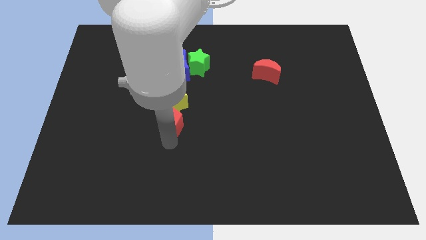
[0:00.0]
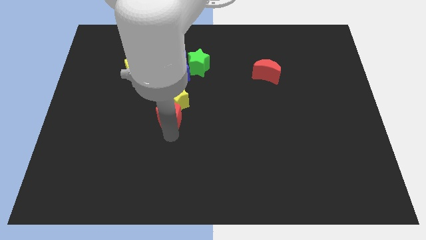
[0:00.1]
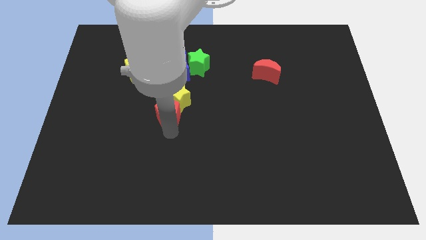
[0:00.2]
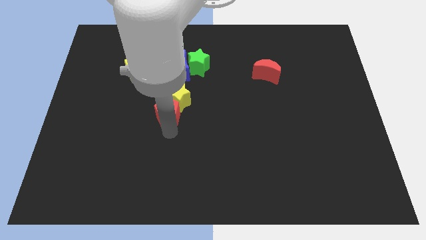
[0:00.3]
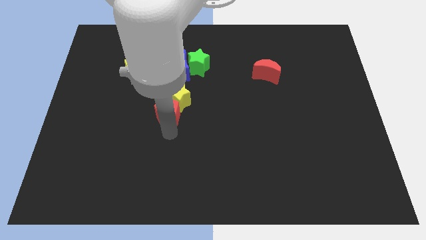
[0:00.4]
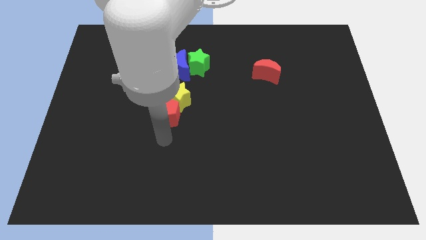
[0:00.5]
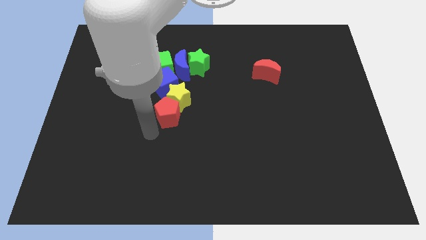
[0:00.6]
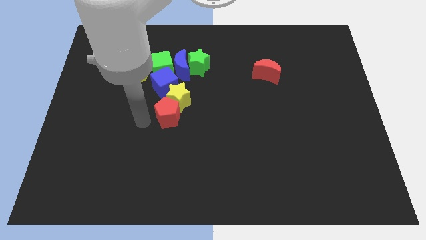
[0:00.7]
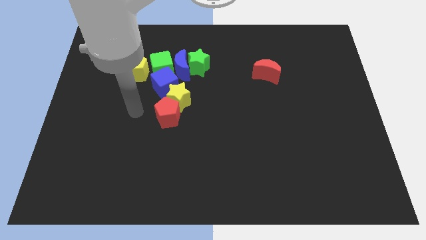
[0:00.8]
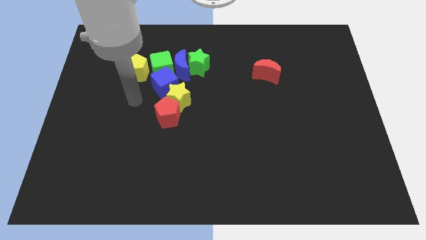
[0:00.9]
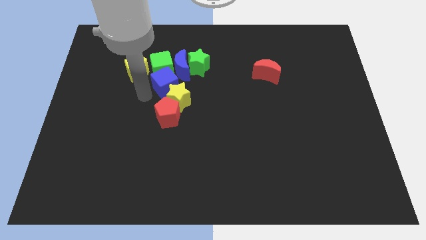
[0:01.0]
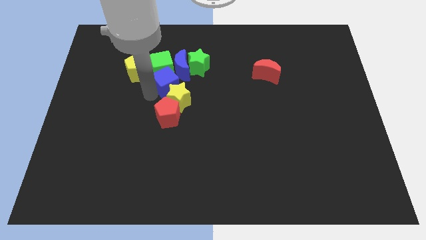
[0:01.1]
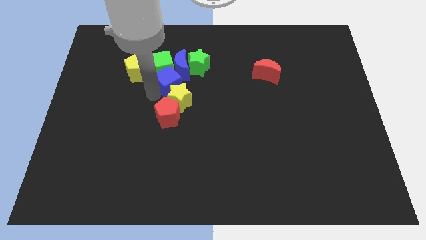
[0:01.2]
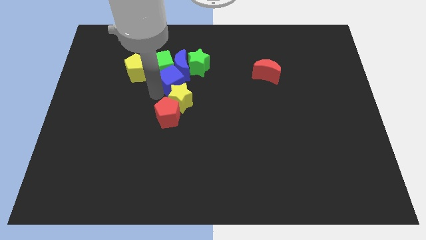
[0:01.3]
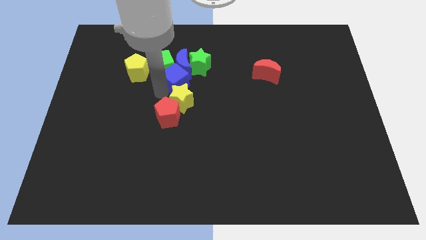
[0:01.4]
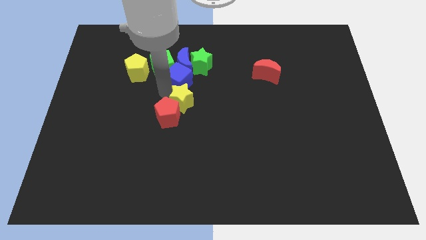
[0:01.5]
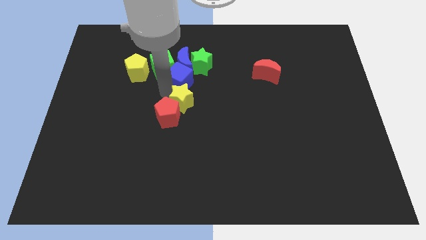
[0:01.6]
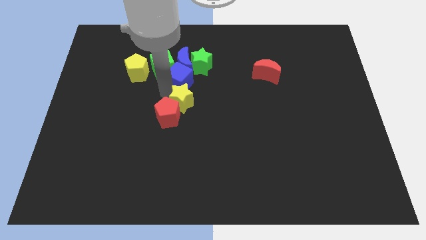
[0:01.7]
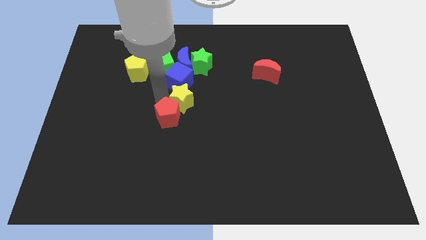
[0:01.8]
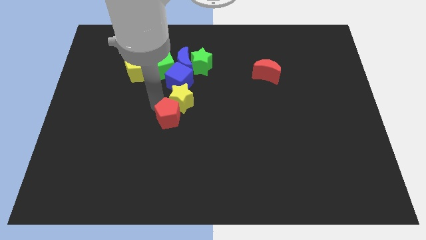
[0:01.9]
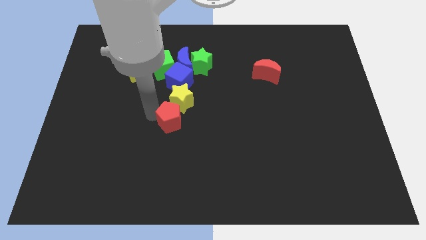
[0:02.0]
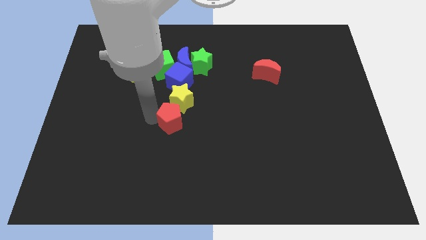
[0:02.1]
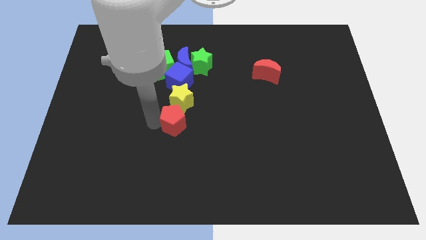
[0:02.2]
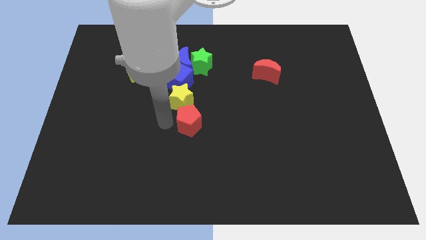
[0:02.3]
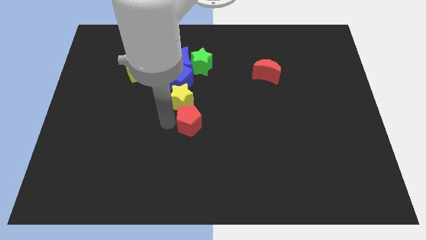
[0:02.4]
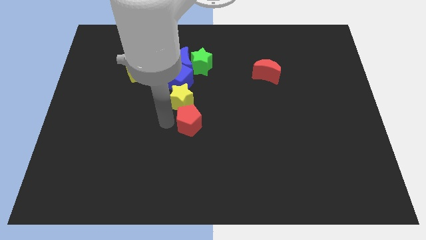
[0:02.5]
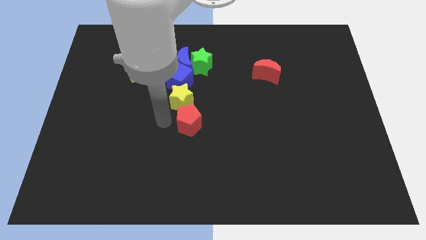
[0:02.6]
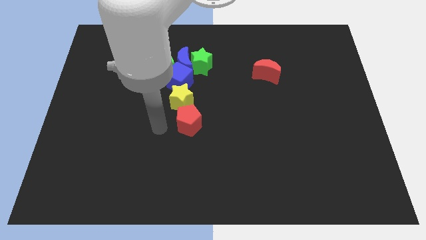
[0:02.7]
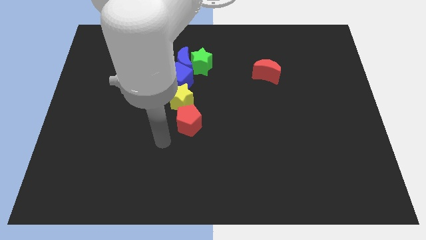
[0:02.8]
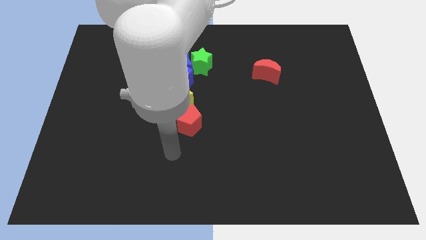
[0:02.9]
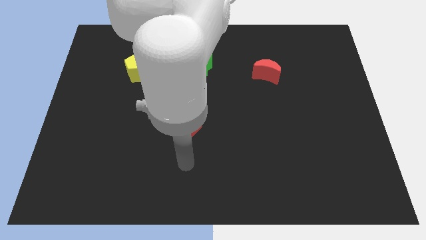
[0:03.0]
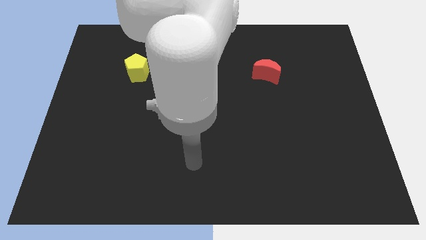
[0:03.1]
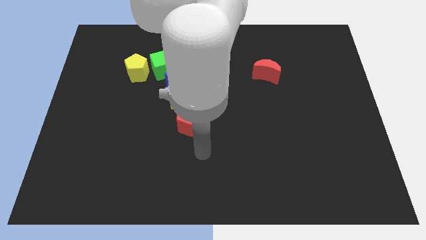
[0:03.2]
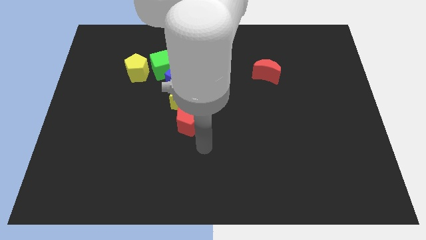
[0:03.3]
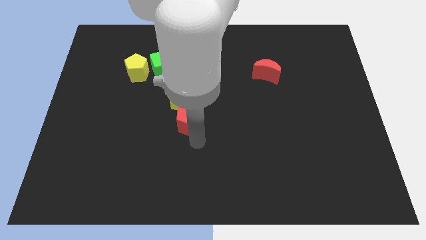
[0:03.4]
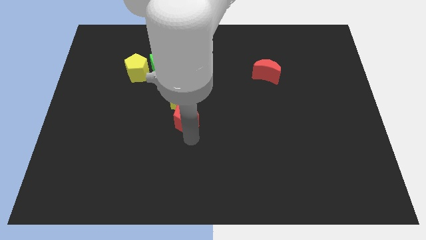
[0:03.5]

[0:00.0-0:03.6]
slightly push the blue cube into blue crescent

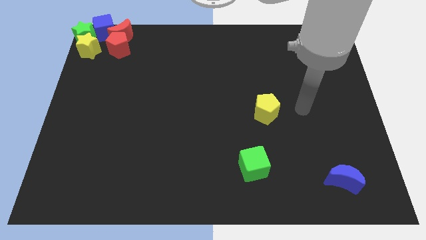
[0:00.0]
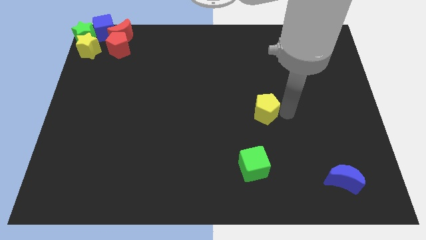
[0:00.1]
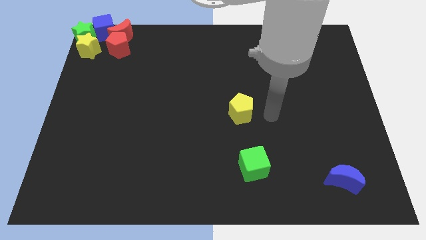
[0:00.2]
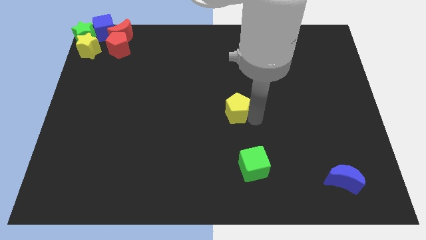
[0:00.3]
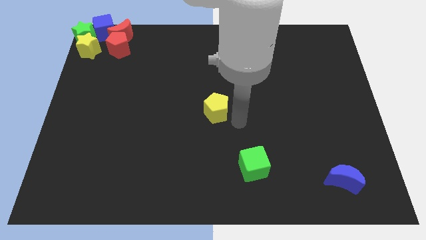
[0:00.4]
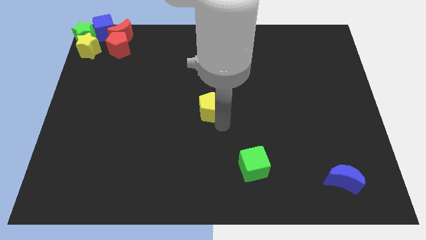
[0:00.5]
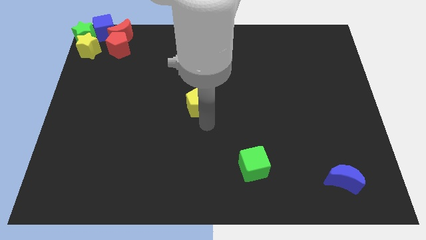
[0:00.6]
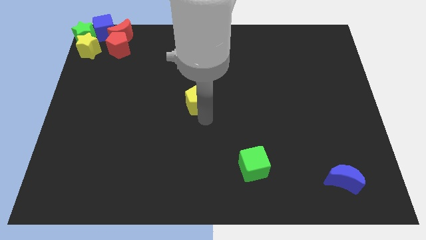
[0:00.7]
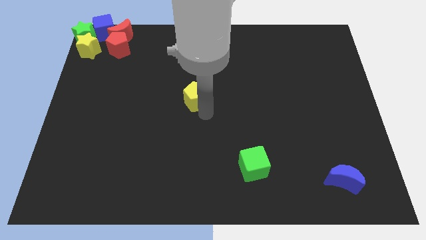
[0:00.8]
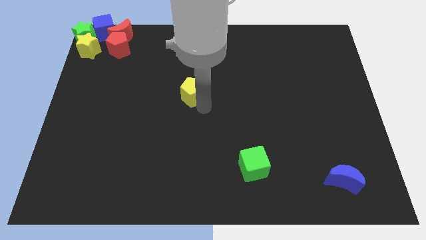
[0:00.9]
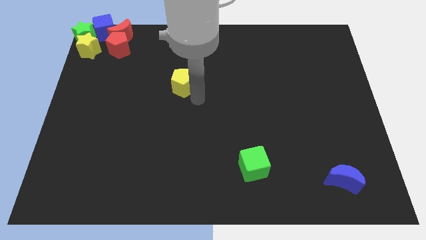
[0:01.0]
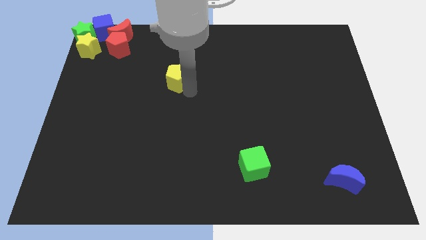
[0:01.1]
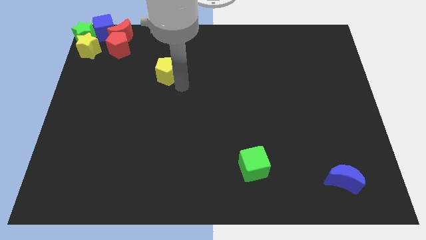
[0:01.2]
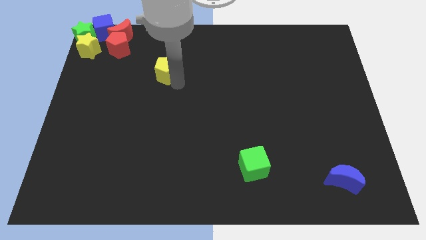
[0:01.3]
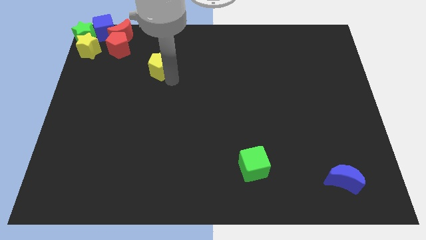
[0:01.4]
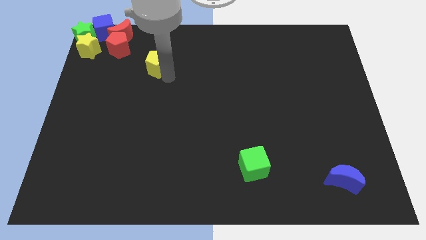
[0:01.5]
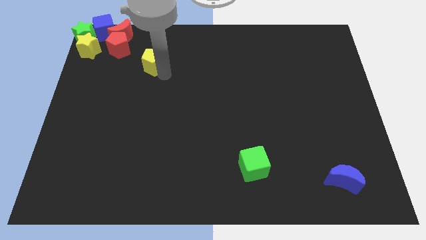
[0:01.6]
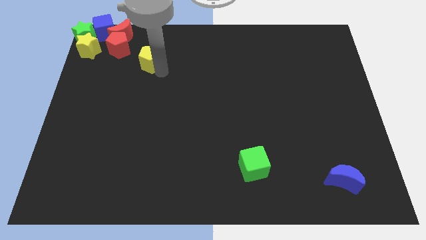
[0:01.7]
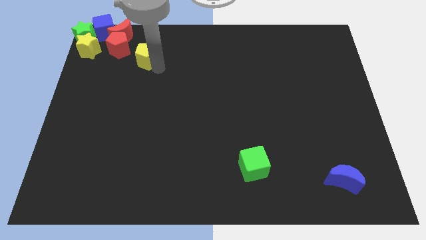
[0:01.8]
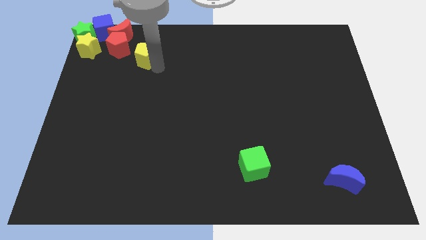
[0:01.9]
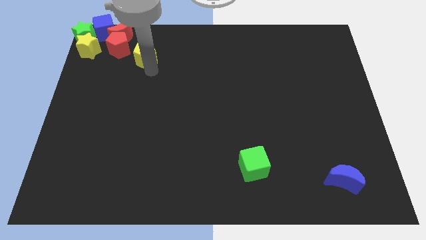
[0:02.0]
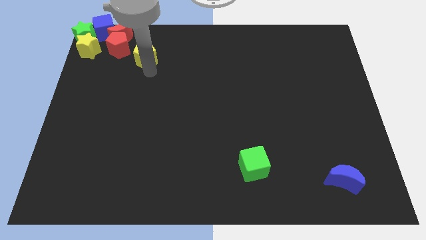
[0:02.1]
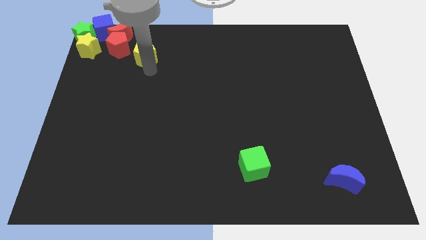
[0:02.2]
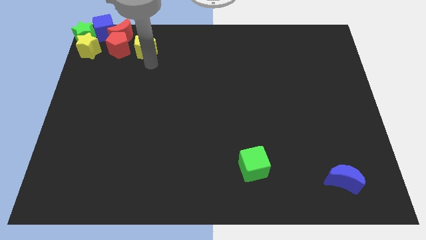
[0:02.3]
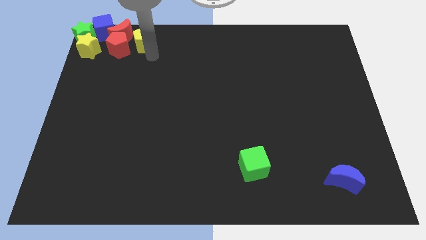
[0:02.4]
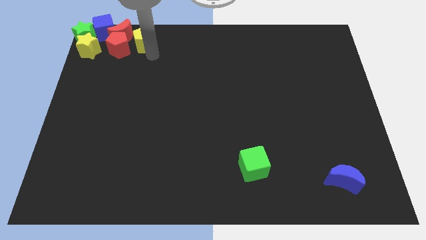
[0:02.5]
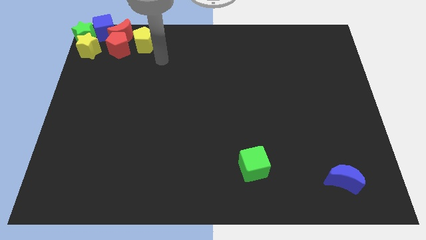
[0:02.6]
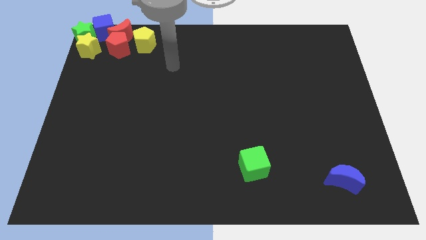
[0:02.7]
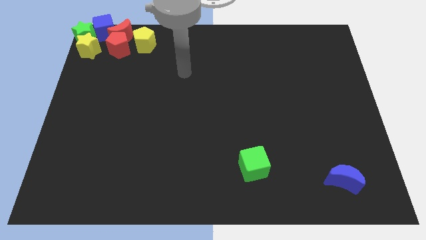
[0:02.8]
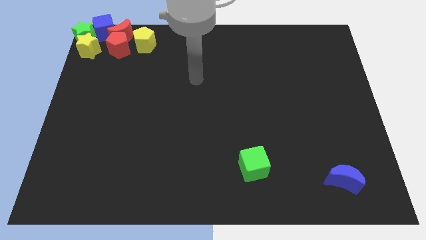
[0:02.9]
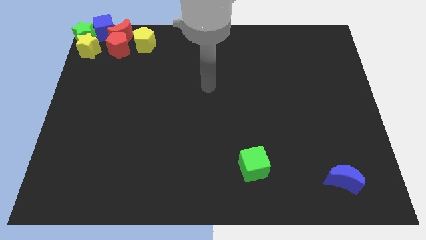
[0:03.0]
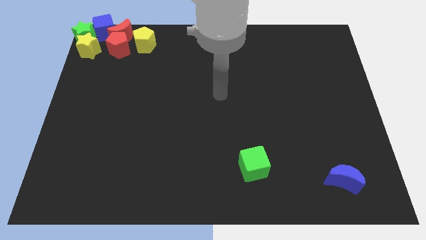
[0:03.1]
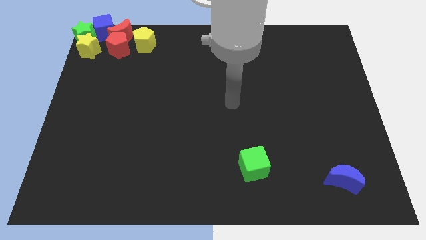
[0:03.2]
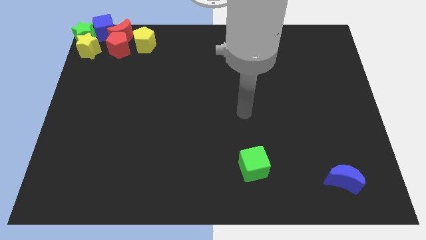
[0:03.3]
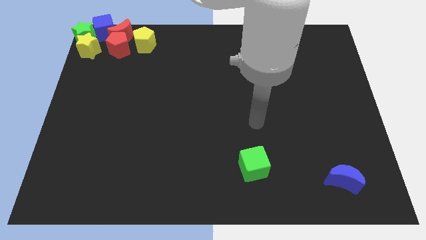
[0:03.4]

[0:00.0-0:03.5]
move the yellow pentagon to the right of the red pentagon

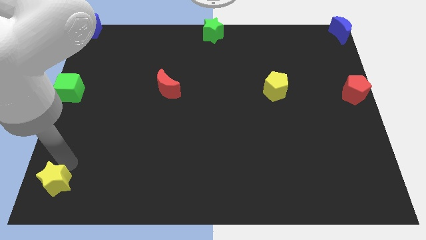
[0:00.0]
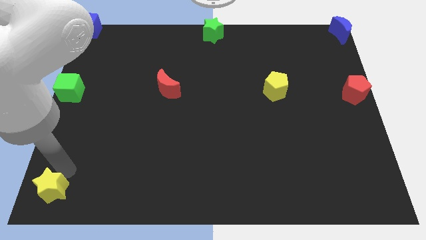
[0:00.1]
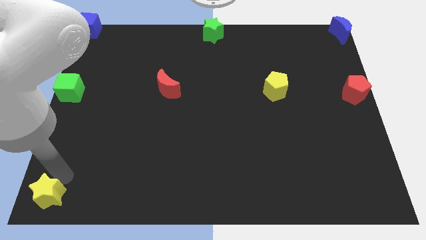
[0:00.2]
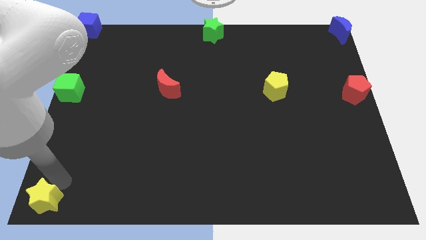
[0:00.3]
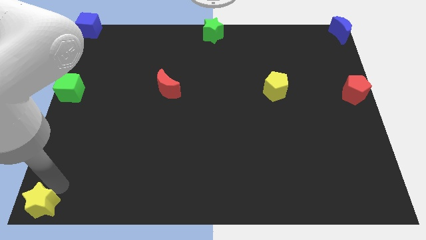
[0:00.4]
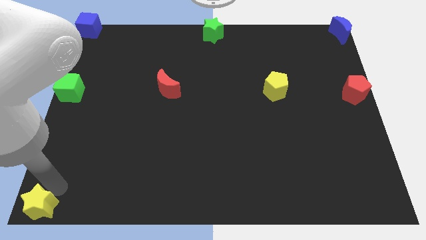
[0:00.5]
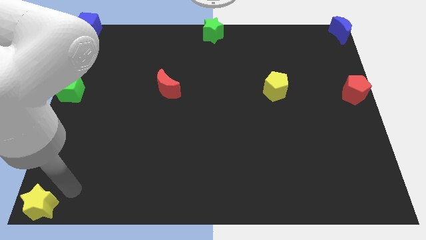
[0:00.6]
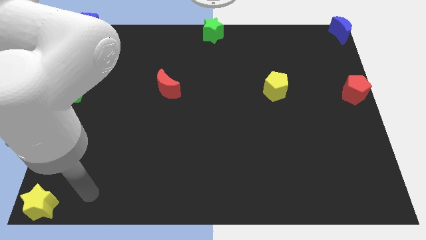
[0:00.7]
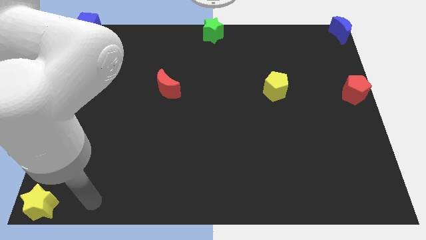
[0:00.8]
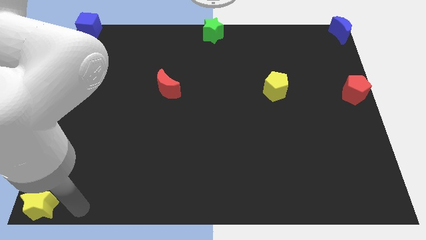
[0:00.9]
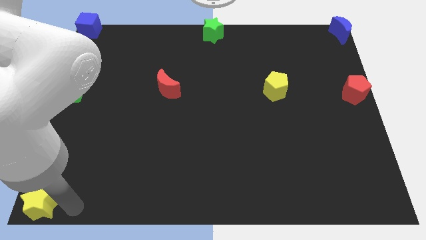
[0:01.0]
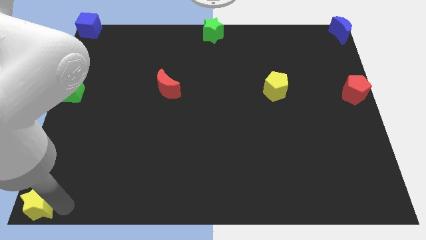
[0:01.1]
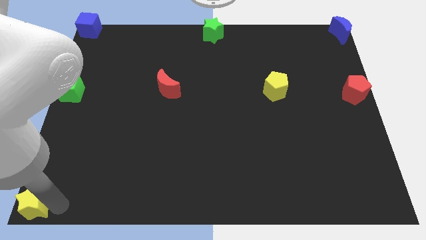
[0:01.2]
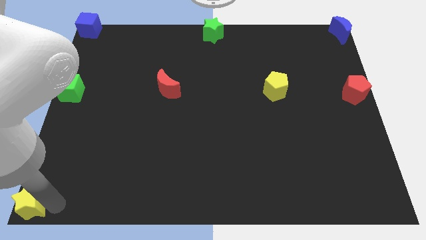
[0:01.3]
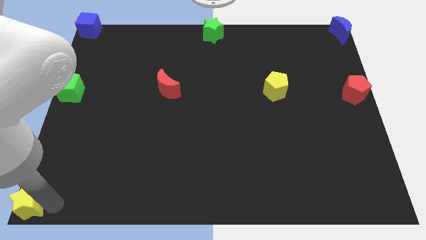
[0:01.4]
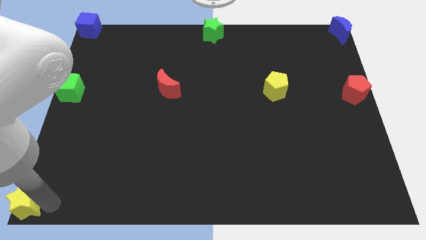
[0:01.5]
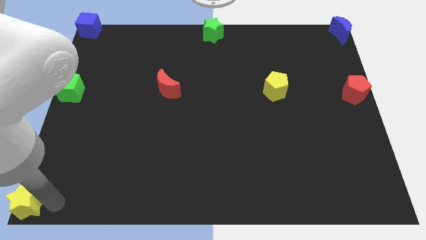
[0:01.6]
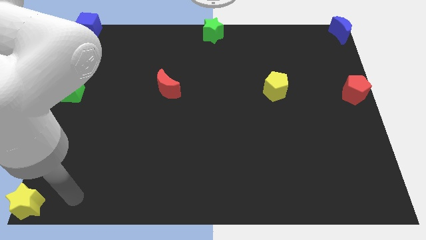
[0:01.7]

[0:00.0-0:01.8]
move the yellow star to the bottom left corner of the board
